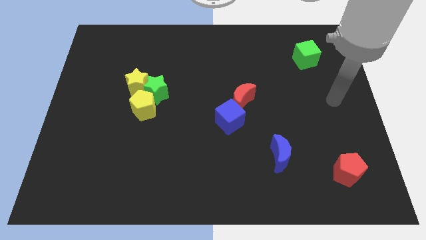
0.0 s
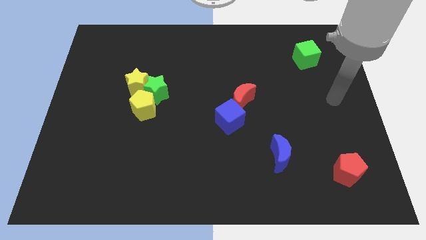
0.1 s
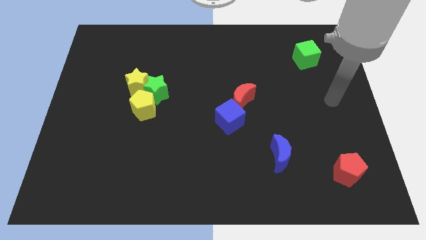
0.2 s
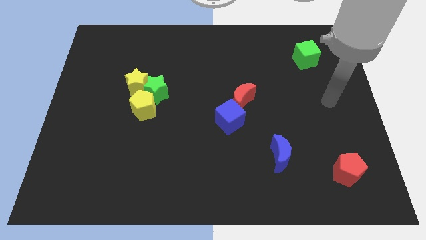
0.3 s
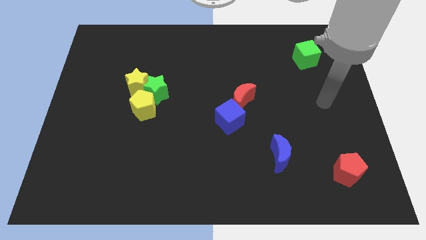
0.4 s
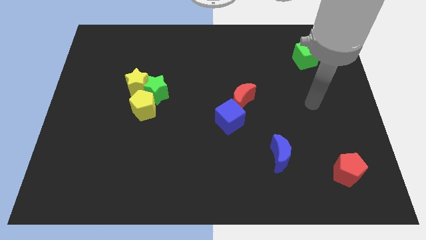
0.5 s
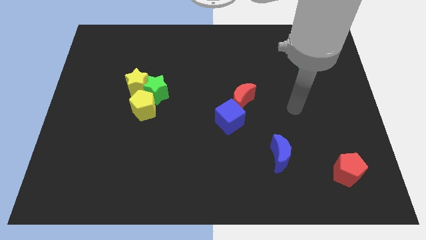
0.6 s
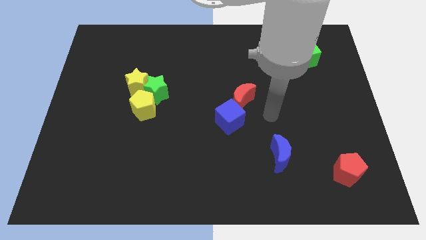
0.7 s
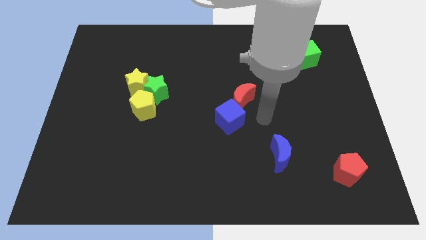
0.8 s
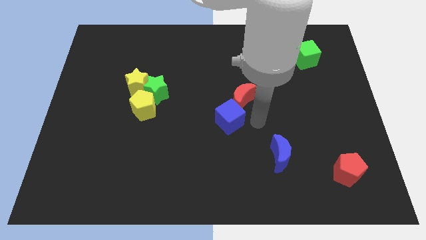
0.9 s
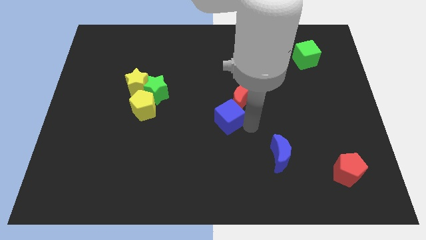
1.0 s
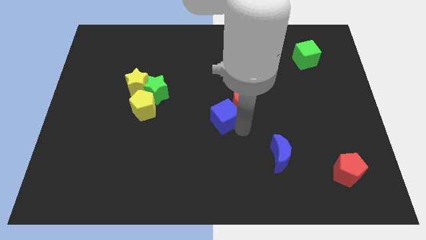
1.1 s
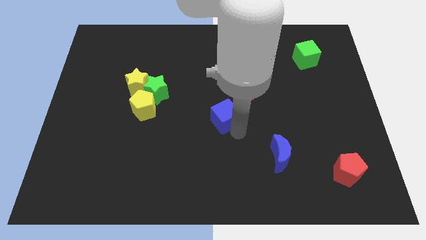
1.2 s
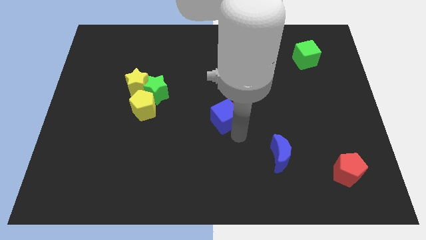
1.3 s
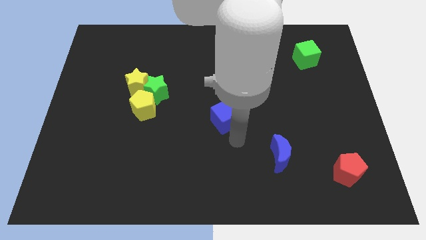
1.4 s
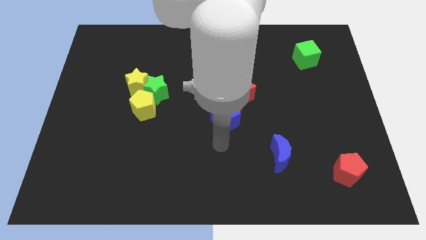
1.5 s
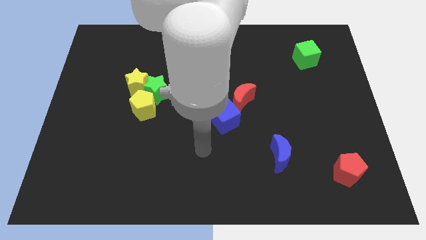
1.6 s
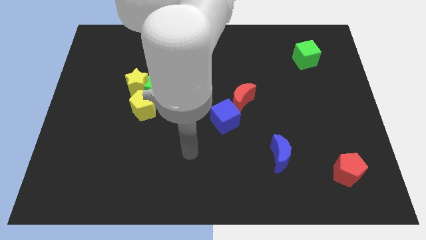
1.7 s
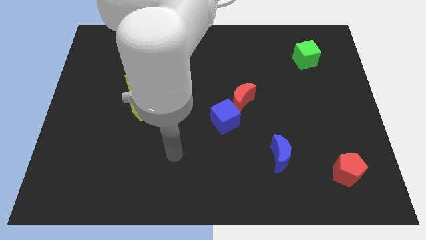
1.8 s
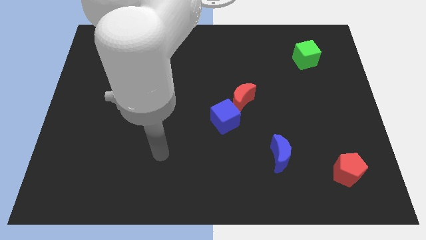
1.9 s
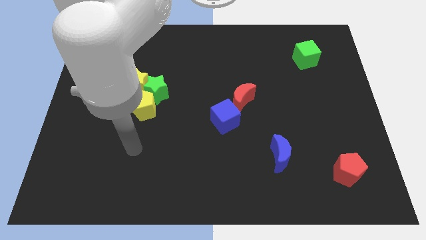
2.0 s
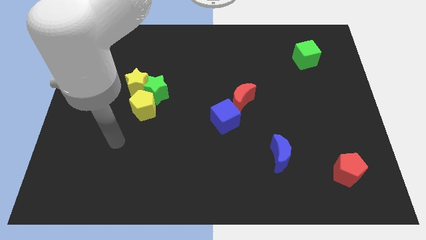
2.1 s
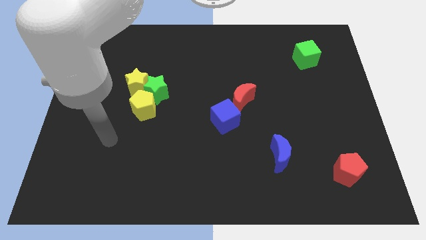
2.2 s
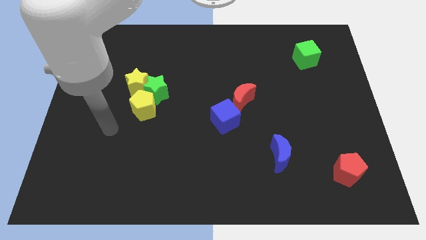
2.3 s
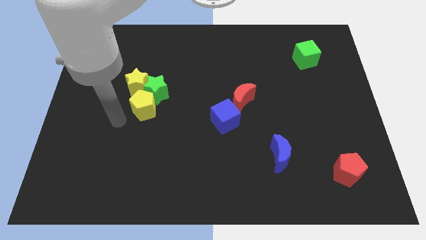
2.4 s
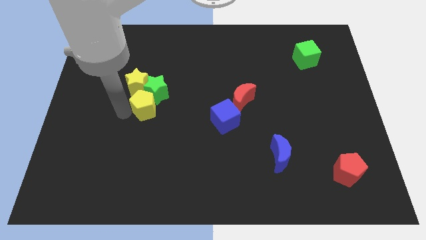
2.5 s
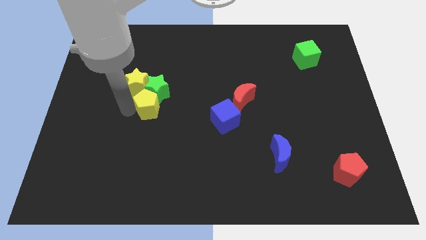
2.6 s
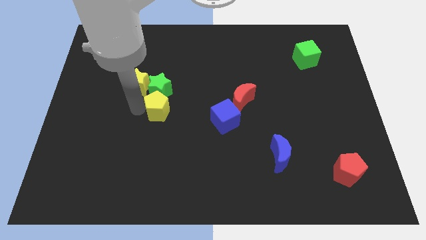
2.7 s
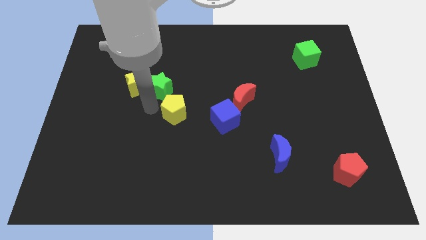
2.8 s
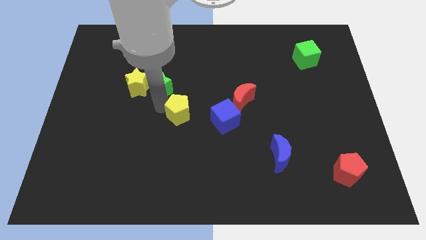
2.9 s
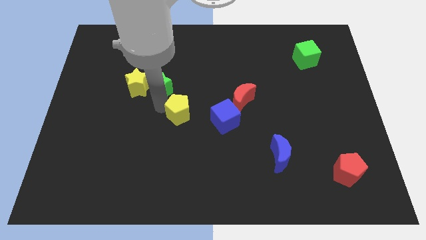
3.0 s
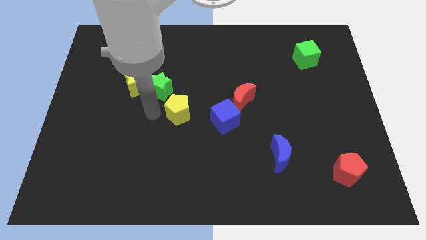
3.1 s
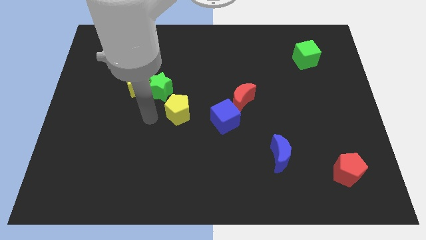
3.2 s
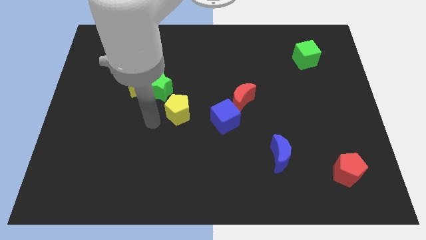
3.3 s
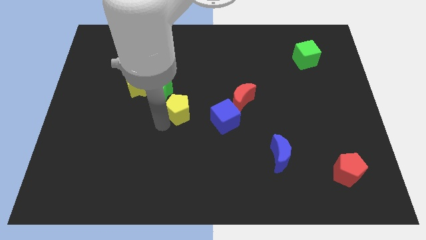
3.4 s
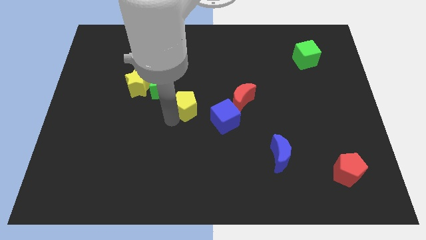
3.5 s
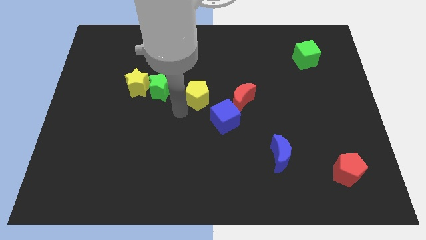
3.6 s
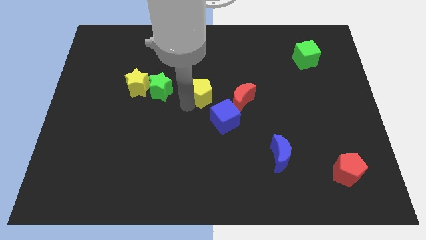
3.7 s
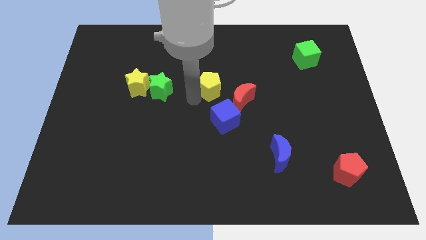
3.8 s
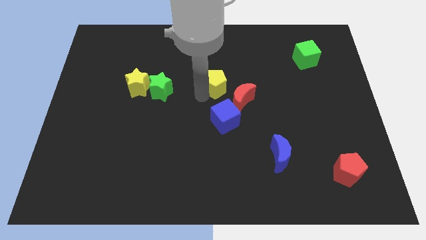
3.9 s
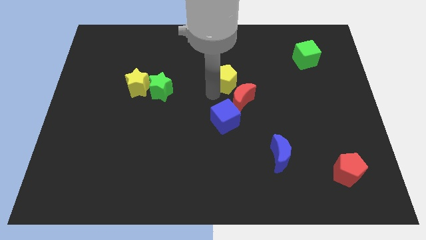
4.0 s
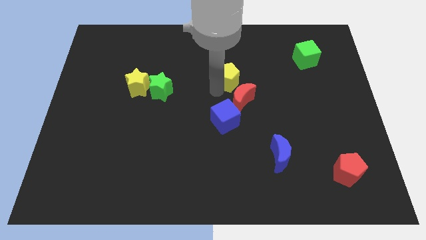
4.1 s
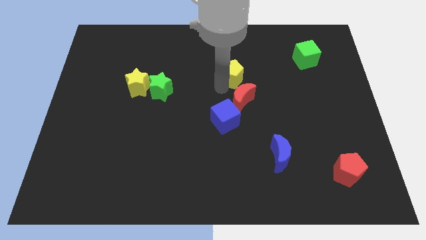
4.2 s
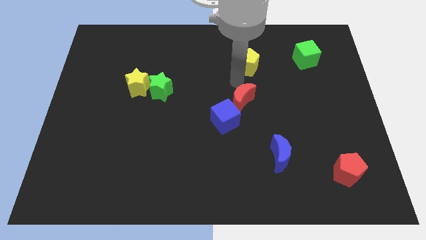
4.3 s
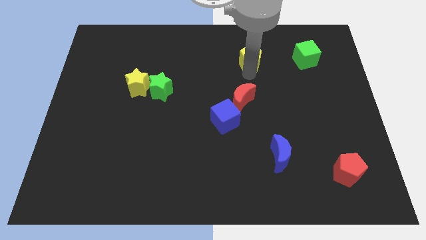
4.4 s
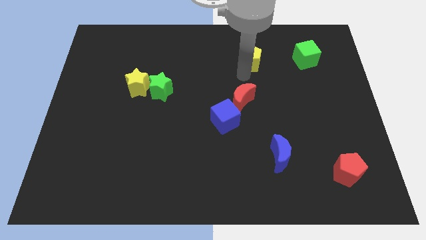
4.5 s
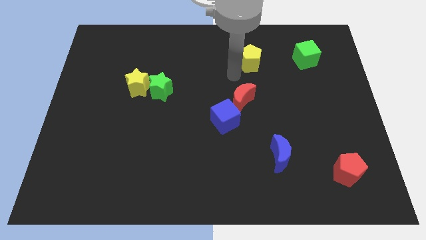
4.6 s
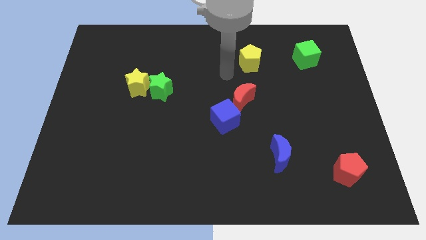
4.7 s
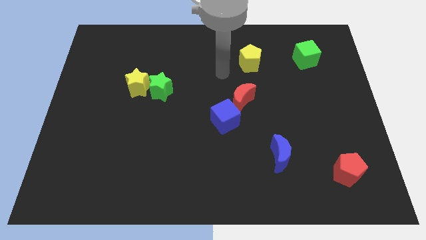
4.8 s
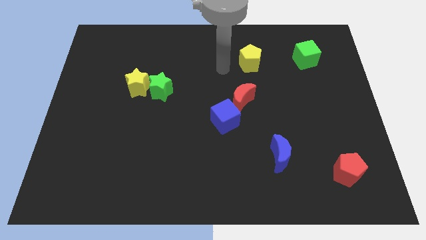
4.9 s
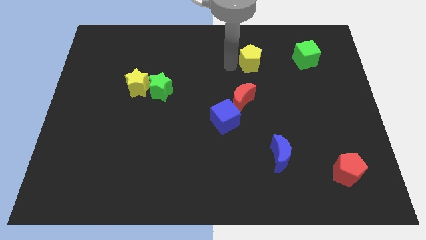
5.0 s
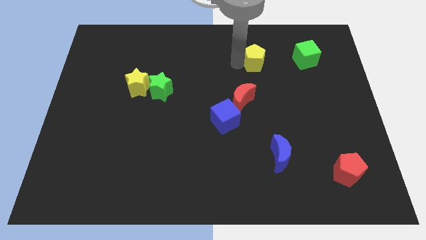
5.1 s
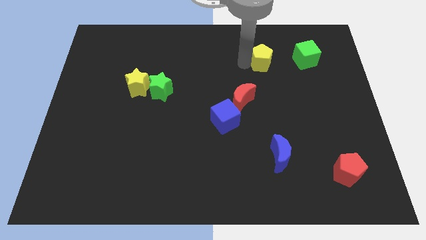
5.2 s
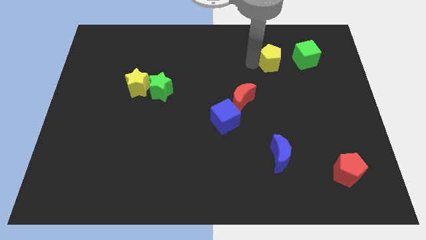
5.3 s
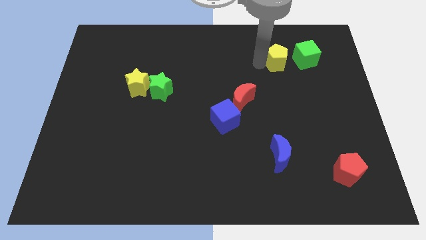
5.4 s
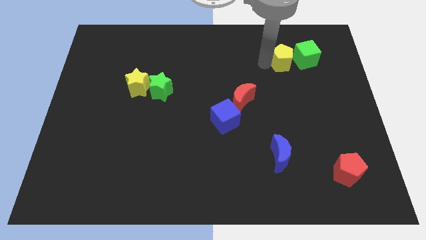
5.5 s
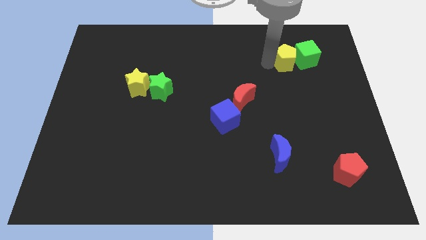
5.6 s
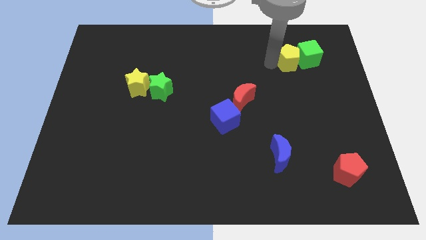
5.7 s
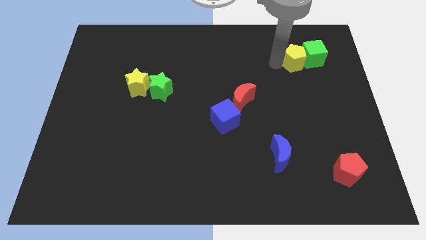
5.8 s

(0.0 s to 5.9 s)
slide the yellow pentagon close to the green cube

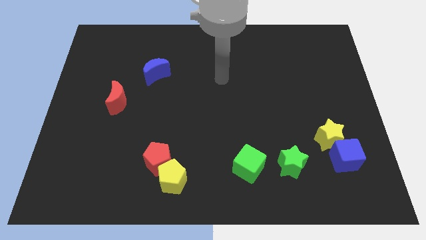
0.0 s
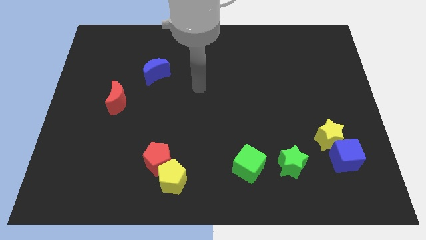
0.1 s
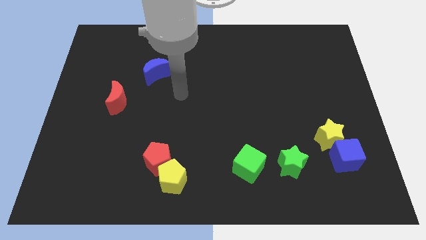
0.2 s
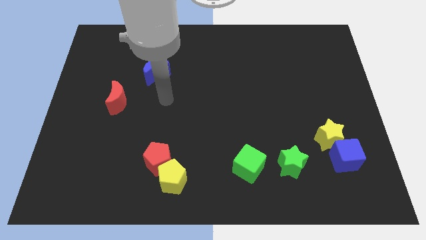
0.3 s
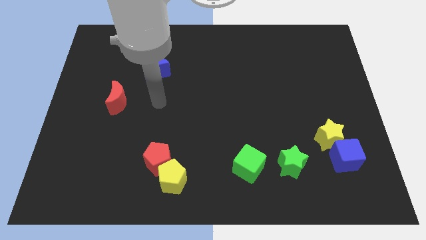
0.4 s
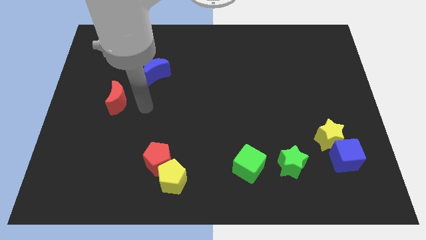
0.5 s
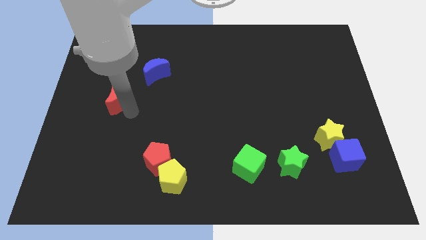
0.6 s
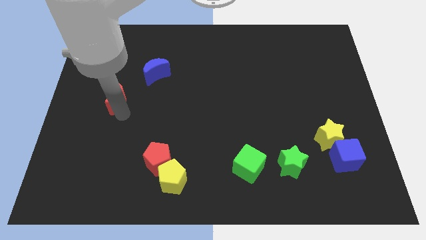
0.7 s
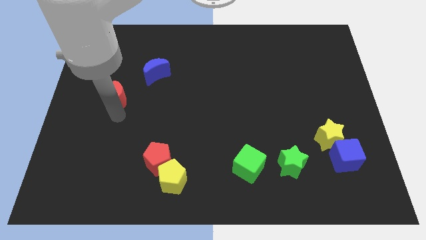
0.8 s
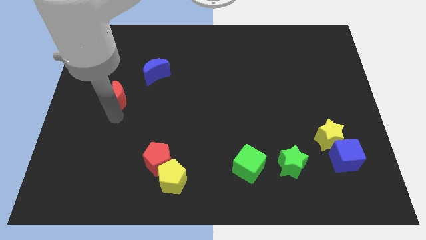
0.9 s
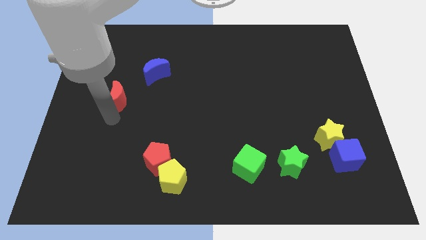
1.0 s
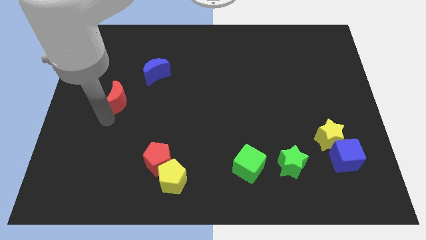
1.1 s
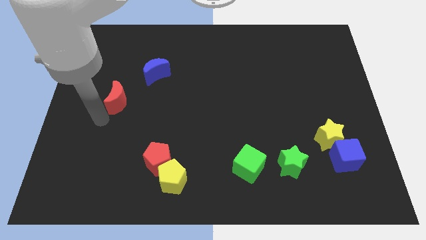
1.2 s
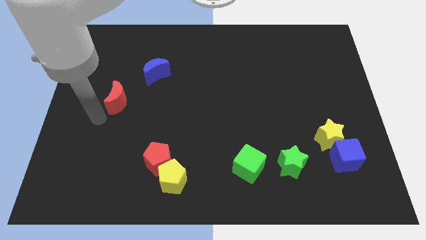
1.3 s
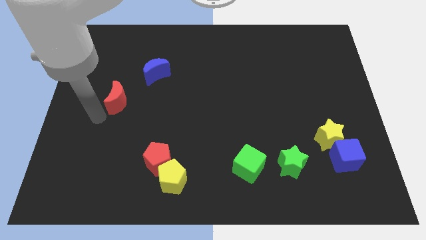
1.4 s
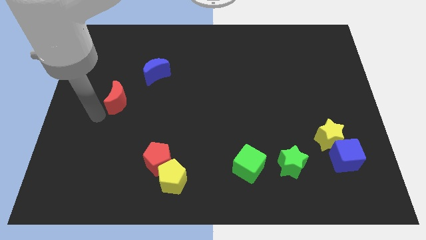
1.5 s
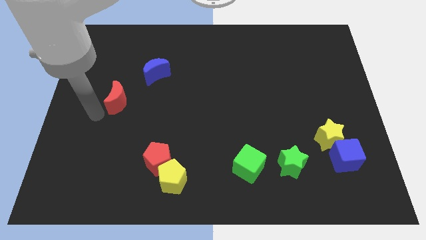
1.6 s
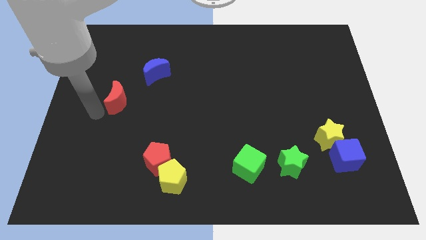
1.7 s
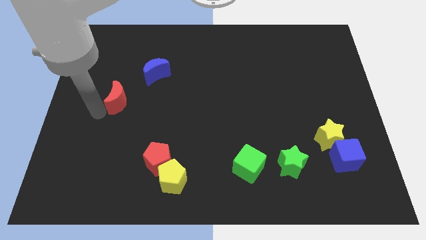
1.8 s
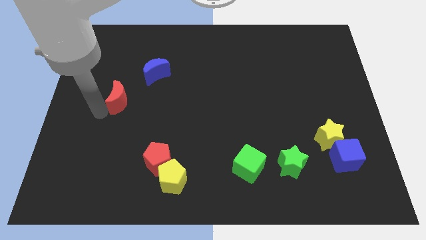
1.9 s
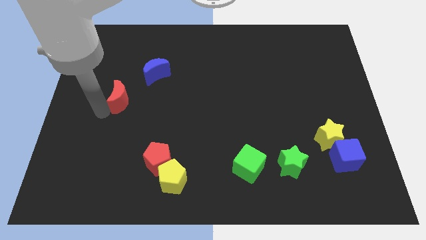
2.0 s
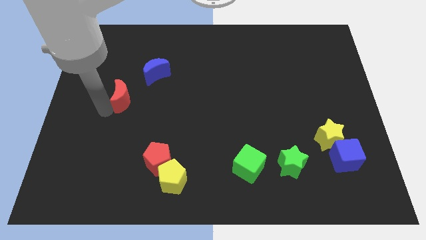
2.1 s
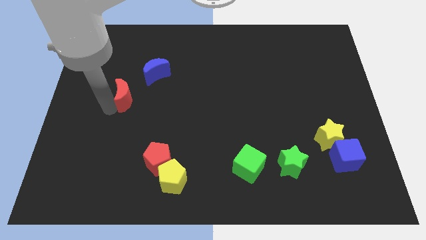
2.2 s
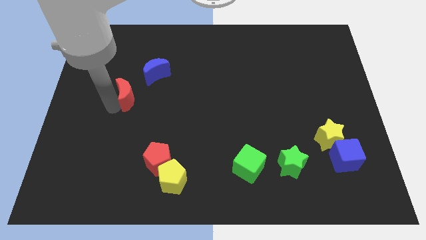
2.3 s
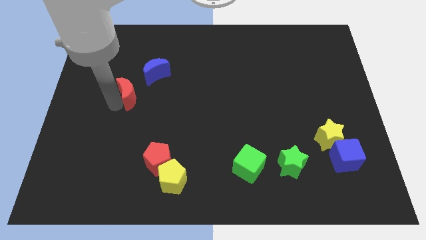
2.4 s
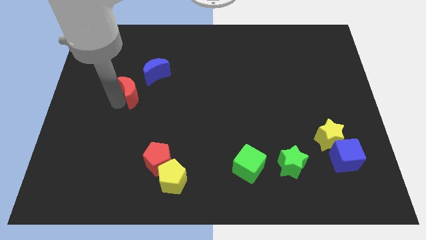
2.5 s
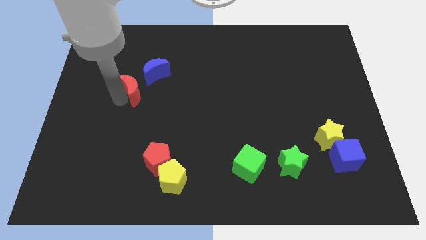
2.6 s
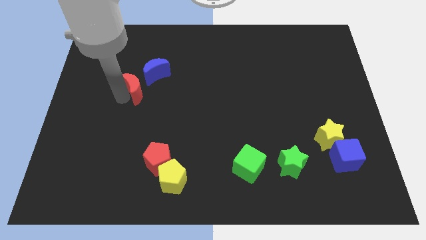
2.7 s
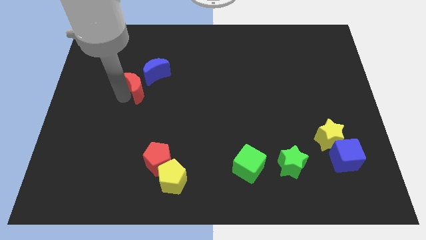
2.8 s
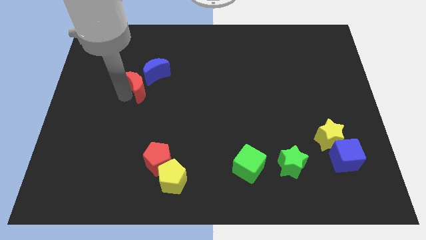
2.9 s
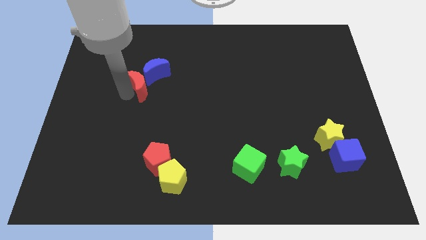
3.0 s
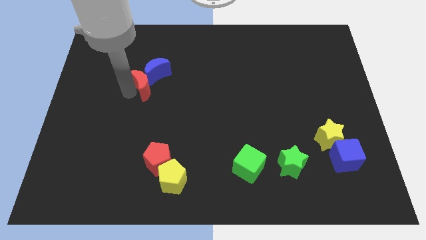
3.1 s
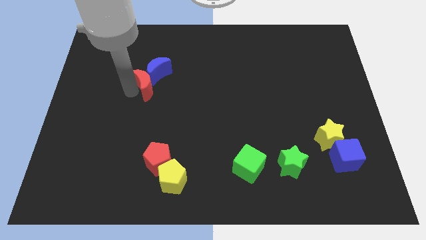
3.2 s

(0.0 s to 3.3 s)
move the red moon towards the blue moon
